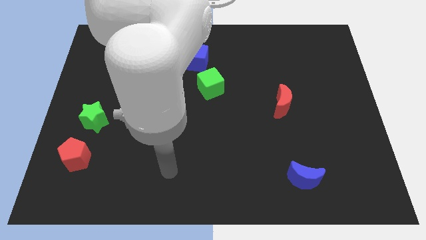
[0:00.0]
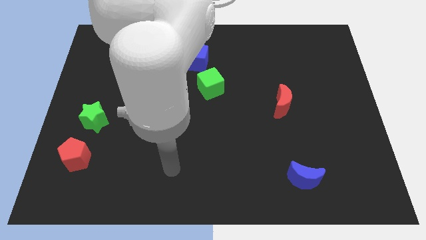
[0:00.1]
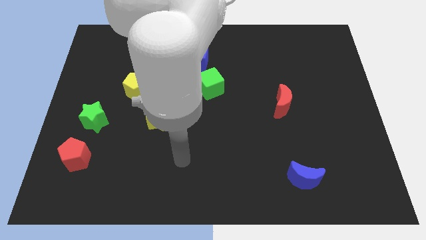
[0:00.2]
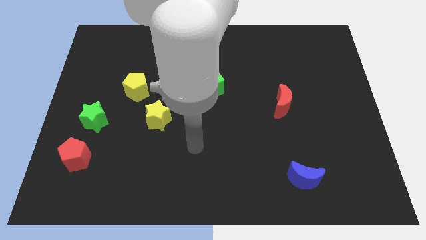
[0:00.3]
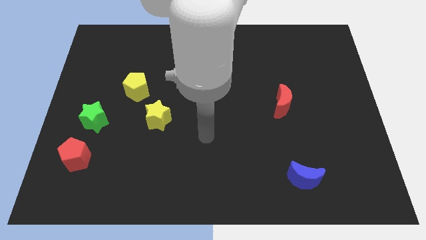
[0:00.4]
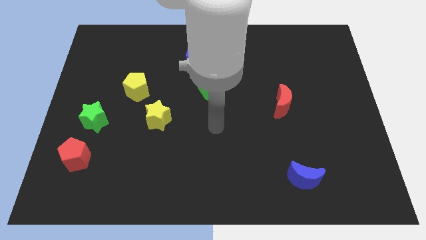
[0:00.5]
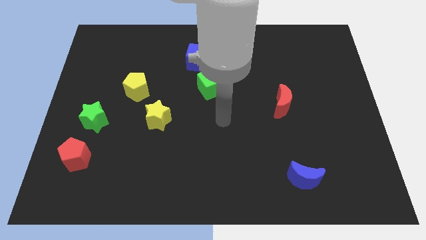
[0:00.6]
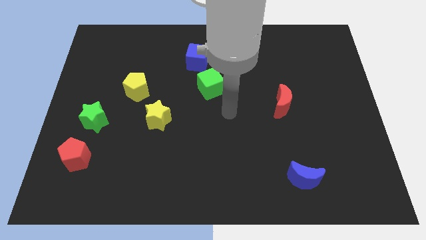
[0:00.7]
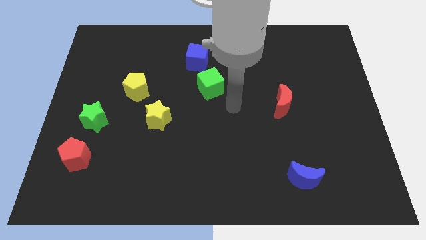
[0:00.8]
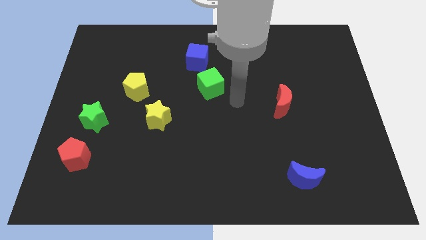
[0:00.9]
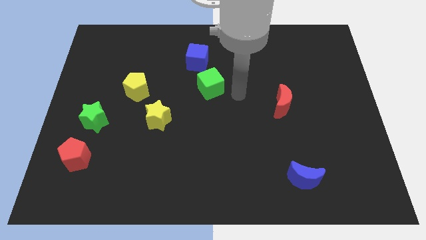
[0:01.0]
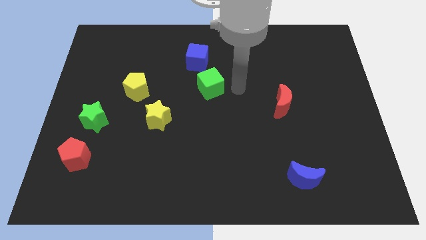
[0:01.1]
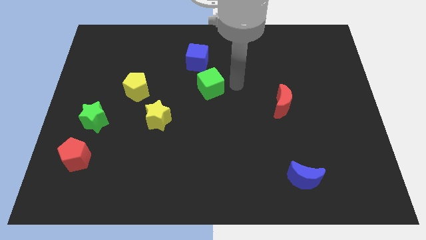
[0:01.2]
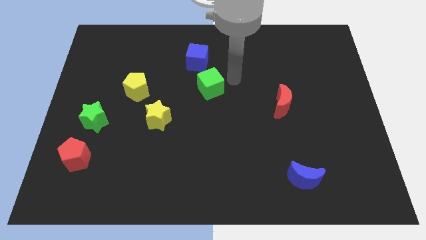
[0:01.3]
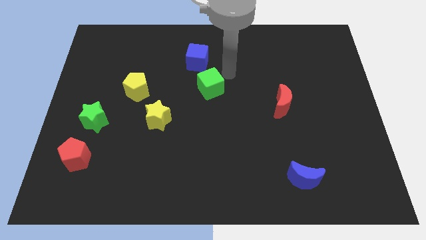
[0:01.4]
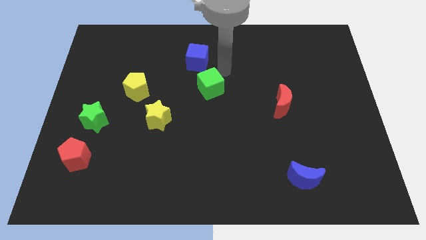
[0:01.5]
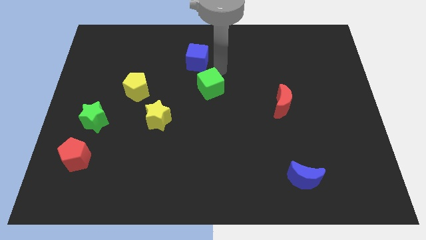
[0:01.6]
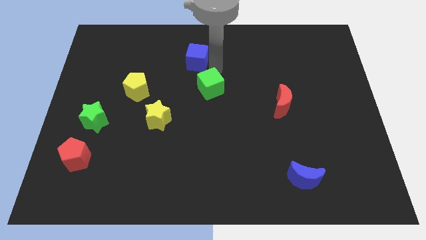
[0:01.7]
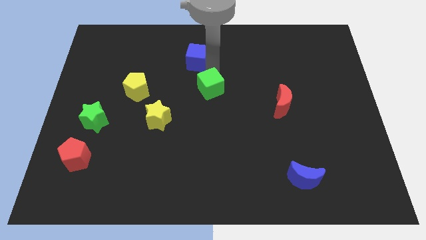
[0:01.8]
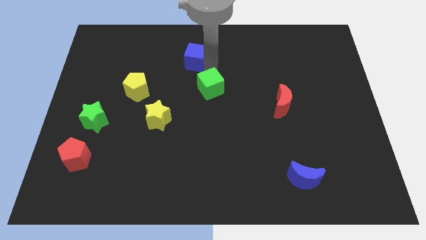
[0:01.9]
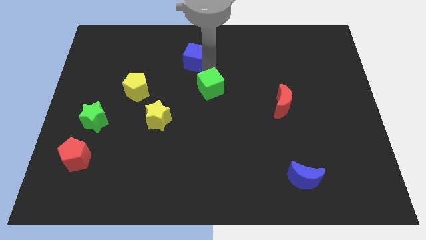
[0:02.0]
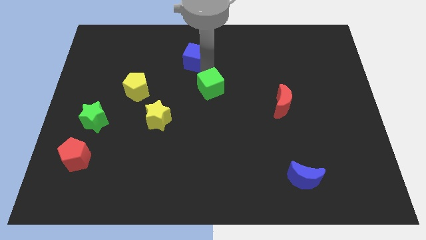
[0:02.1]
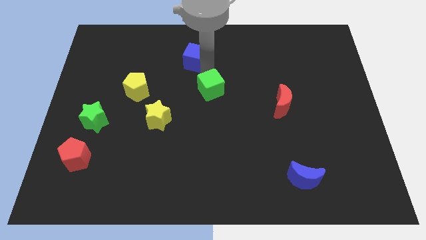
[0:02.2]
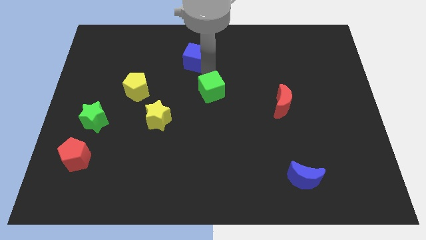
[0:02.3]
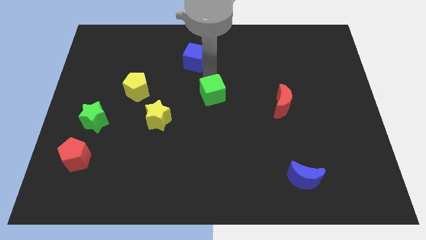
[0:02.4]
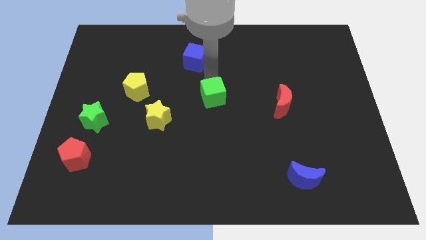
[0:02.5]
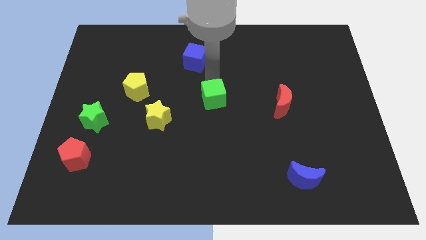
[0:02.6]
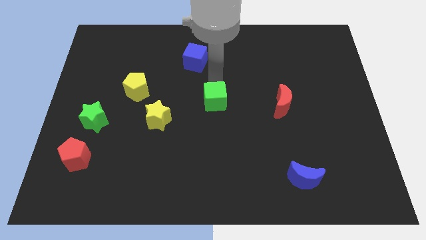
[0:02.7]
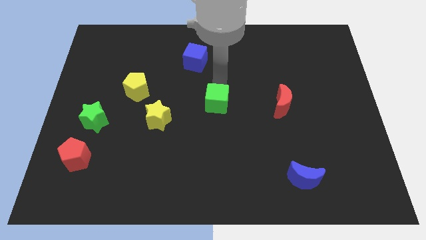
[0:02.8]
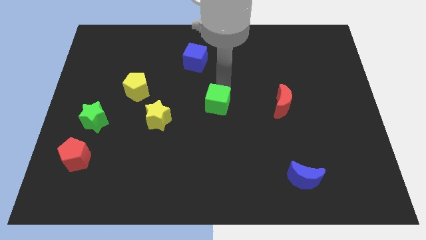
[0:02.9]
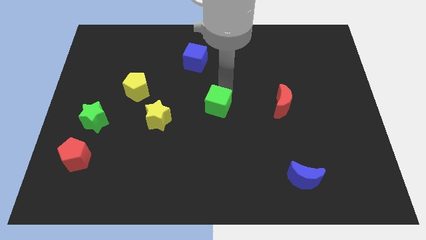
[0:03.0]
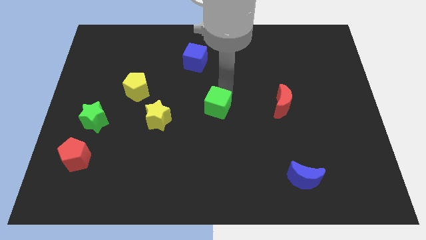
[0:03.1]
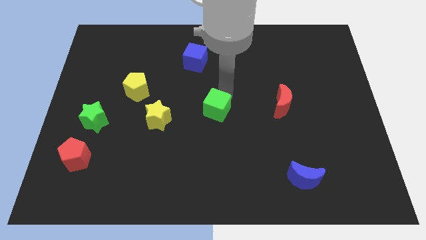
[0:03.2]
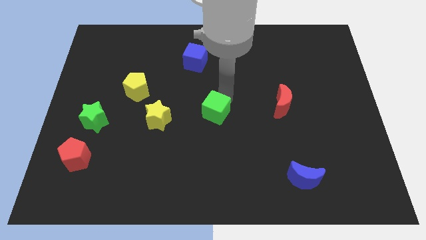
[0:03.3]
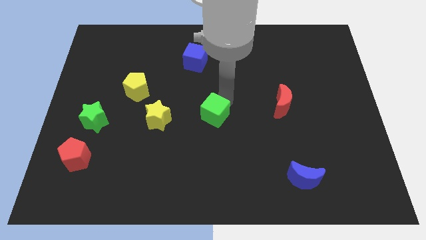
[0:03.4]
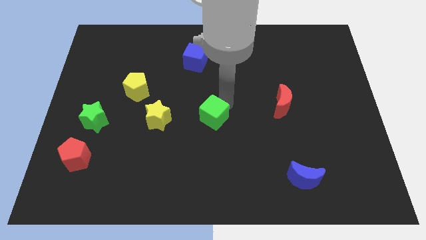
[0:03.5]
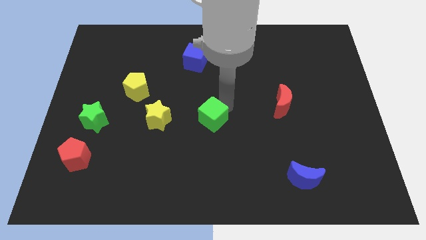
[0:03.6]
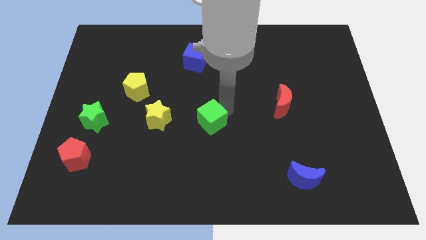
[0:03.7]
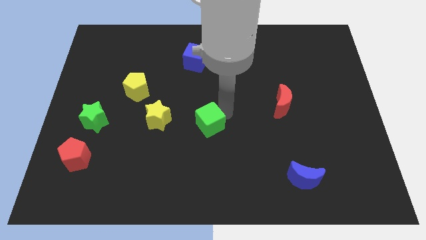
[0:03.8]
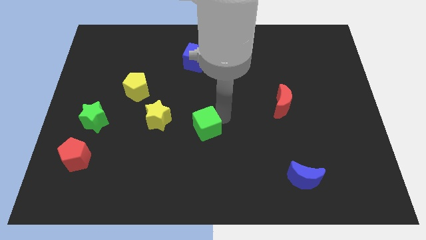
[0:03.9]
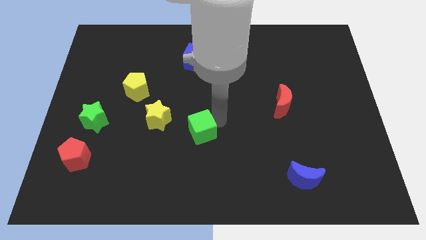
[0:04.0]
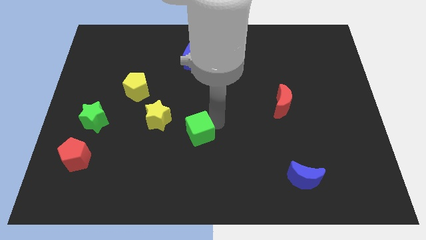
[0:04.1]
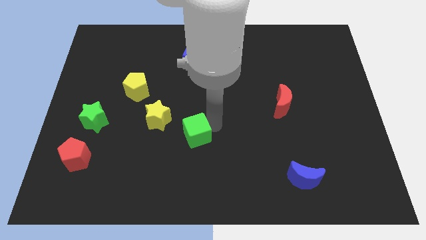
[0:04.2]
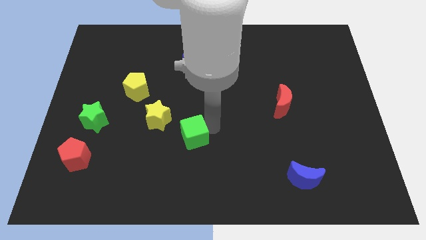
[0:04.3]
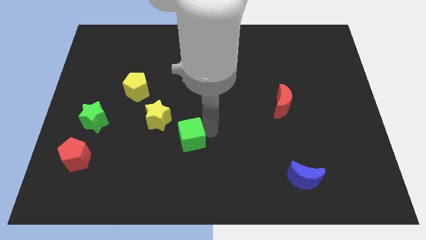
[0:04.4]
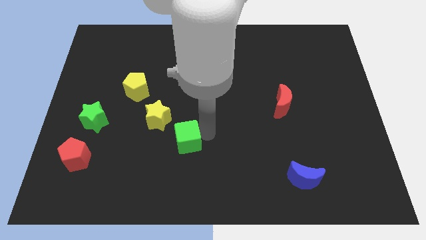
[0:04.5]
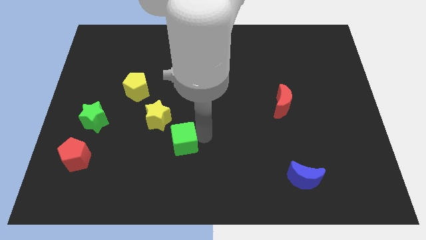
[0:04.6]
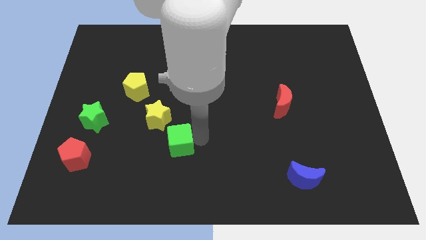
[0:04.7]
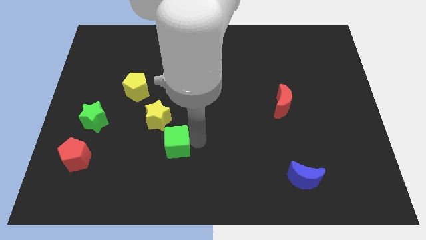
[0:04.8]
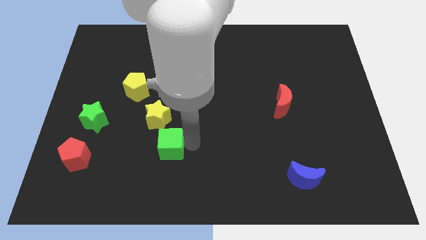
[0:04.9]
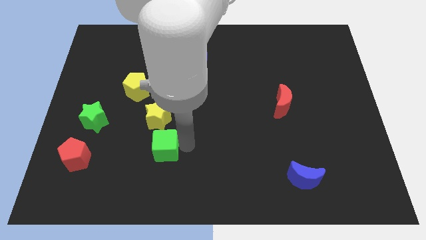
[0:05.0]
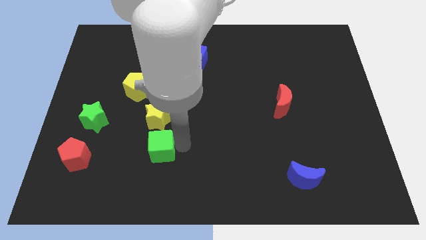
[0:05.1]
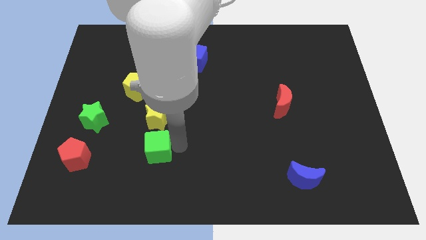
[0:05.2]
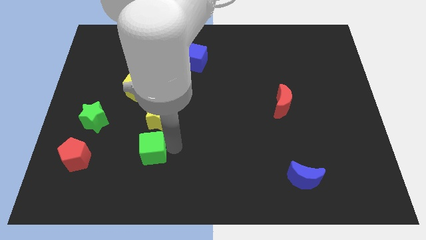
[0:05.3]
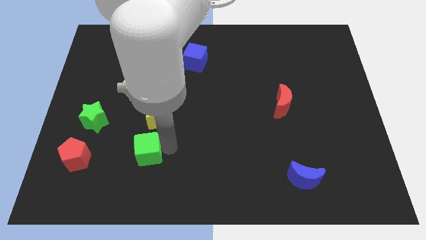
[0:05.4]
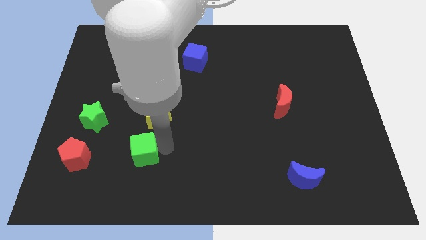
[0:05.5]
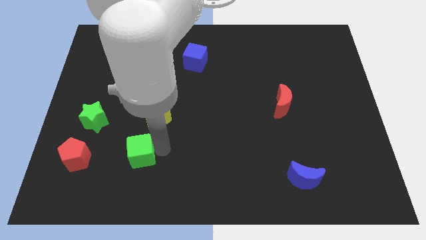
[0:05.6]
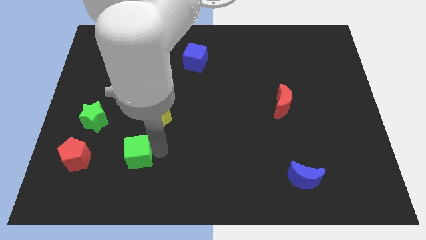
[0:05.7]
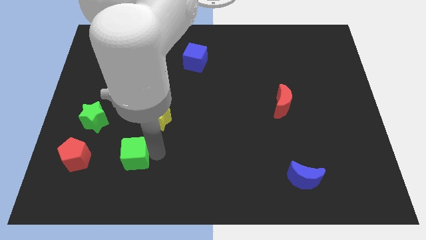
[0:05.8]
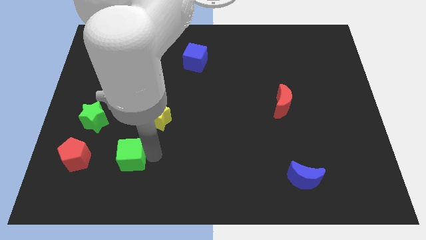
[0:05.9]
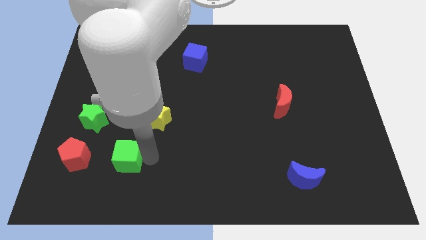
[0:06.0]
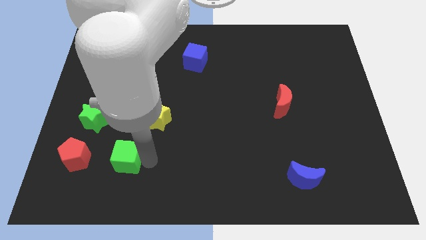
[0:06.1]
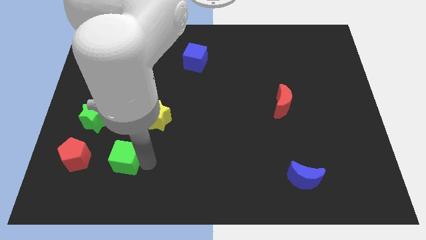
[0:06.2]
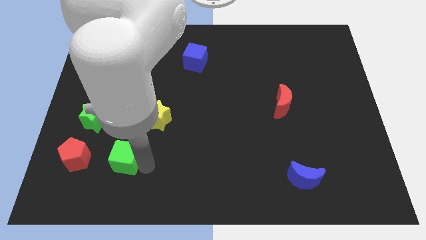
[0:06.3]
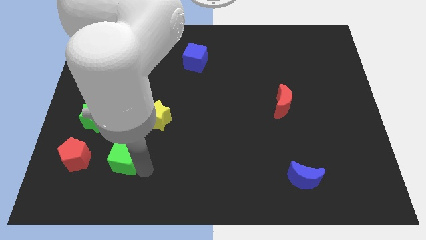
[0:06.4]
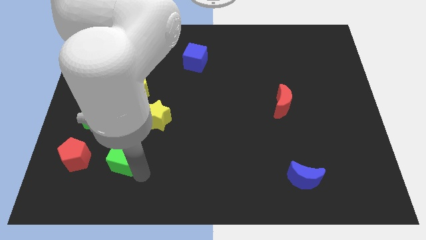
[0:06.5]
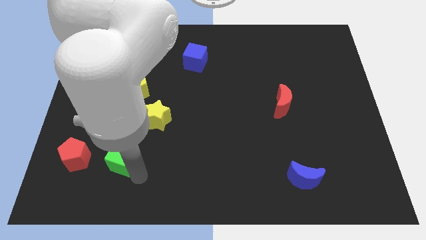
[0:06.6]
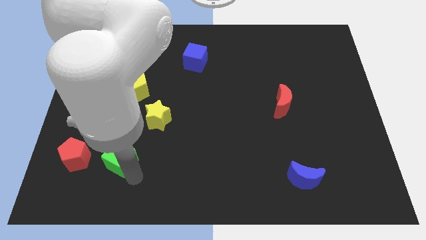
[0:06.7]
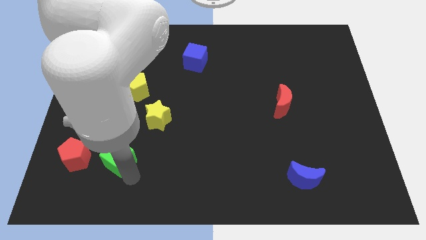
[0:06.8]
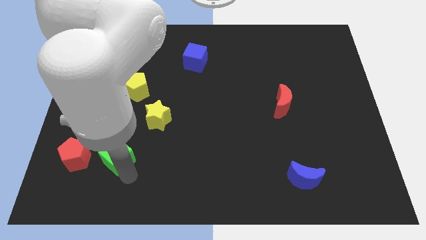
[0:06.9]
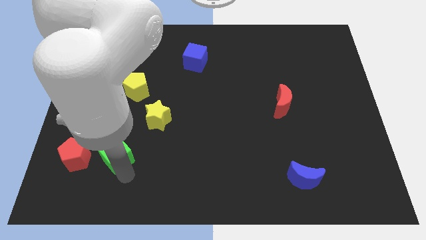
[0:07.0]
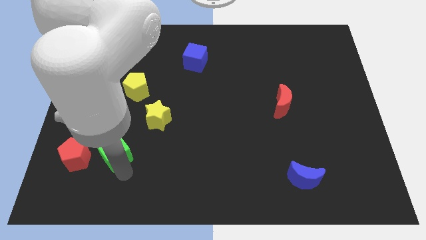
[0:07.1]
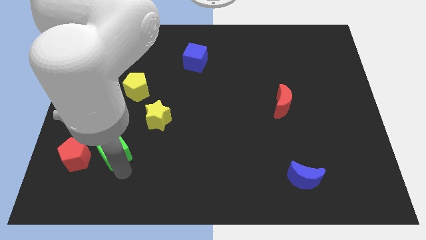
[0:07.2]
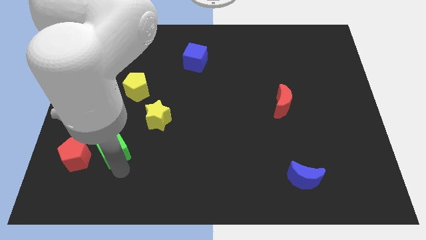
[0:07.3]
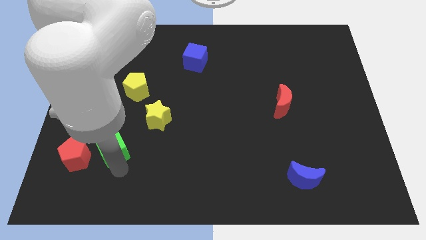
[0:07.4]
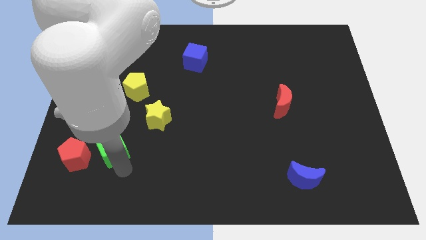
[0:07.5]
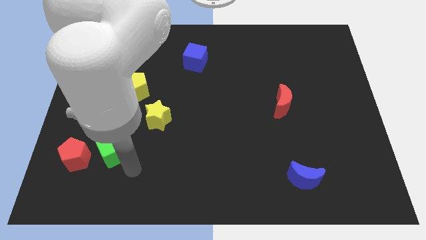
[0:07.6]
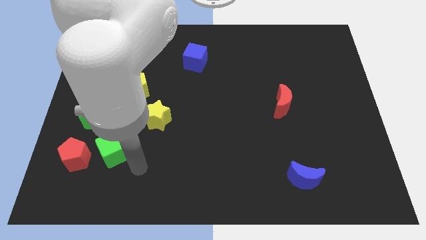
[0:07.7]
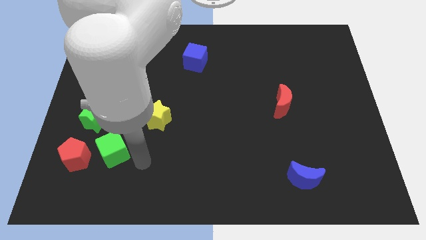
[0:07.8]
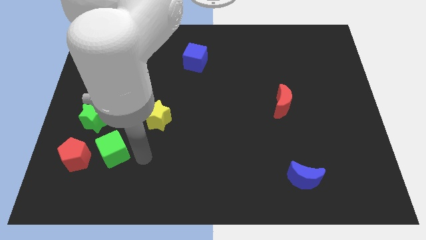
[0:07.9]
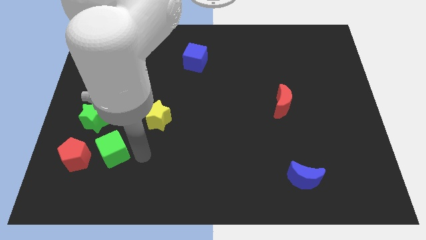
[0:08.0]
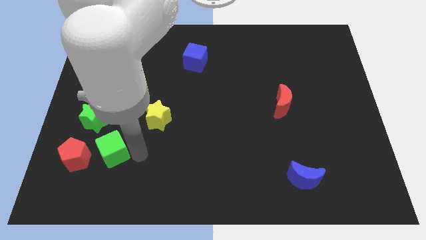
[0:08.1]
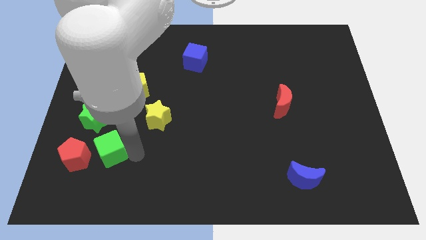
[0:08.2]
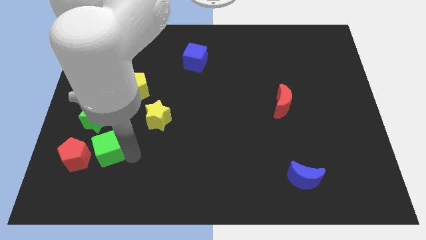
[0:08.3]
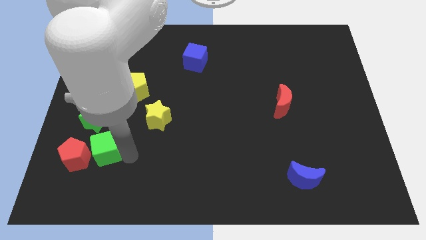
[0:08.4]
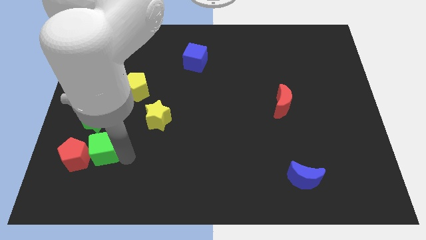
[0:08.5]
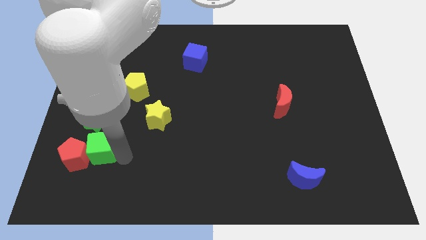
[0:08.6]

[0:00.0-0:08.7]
slide the green cube to the red pentagon
